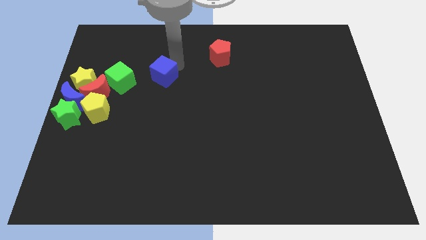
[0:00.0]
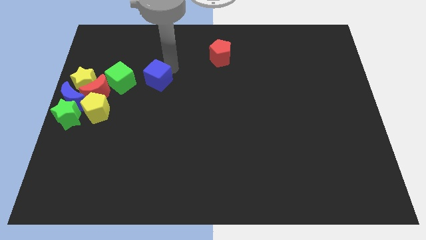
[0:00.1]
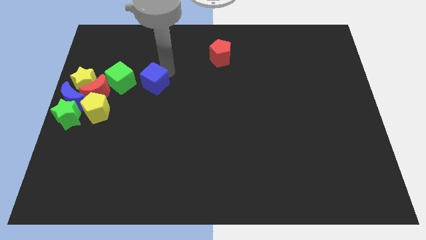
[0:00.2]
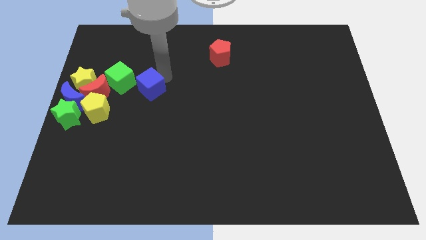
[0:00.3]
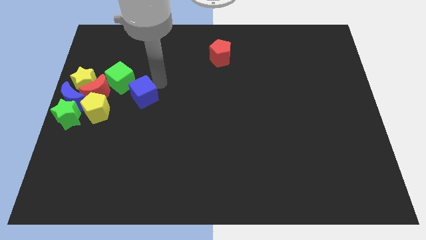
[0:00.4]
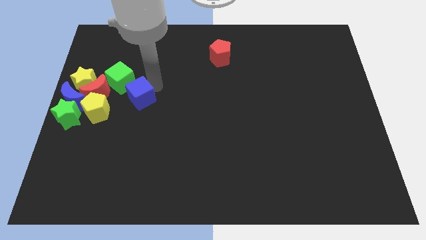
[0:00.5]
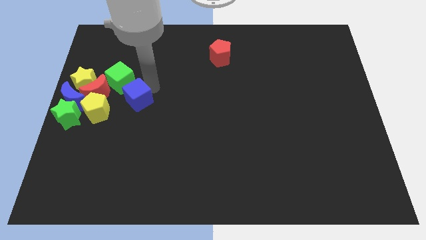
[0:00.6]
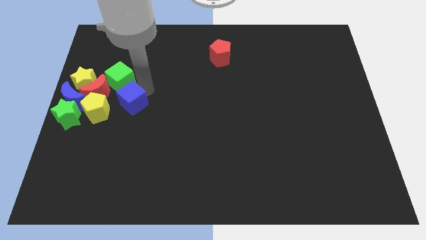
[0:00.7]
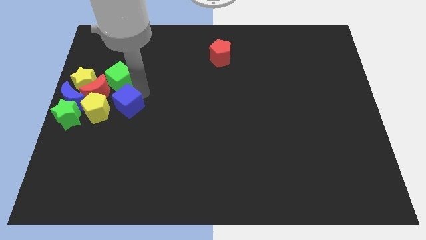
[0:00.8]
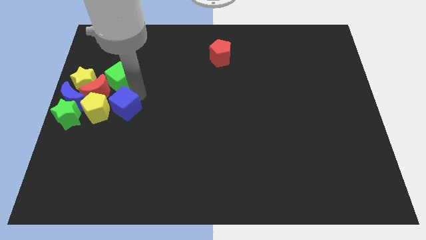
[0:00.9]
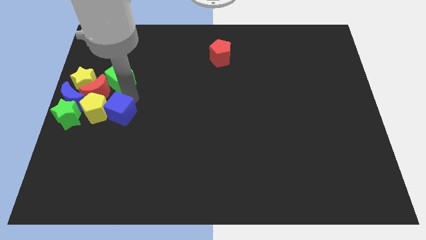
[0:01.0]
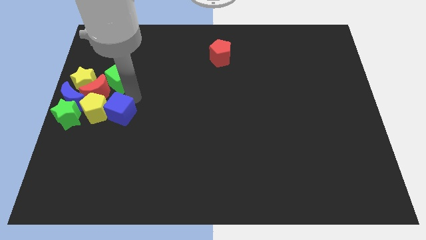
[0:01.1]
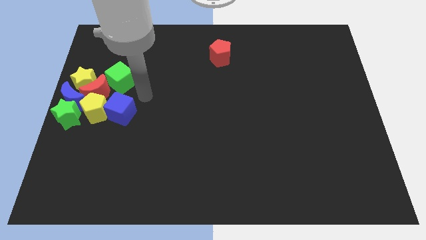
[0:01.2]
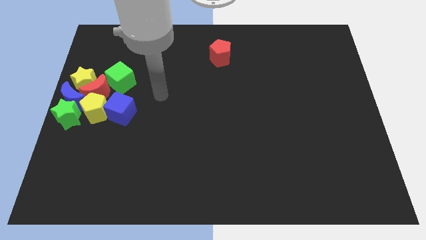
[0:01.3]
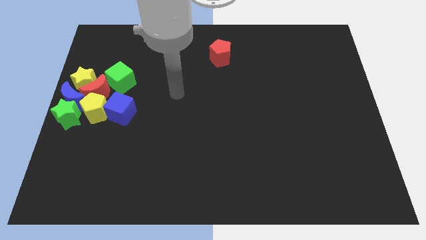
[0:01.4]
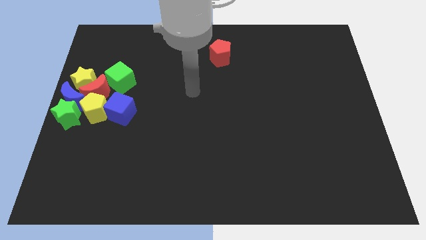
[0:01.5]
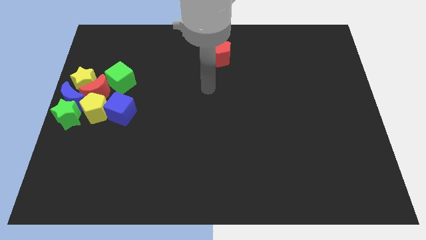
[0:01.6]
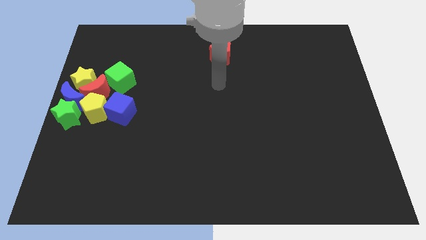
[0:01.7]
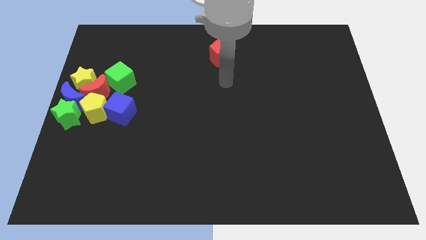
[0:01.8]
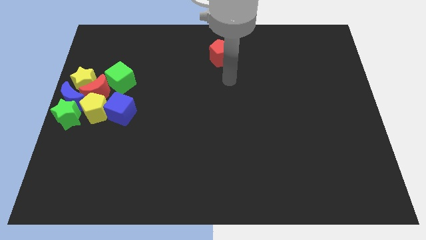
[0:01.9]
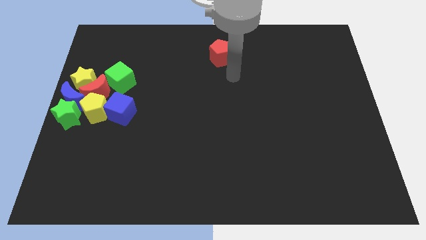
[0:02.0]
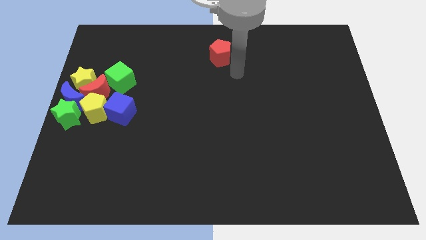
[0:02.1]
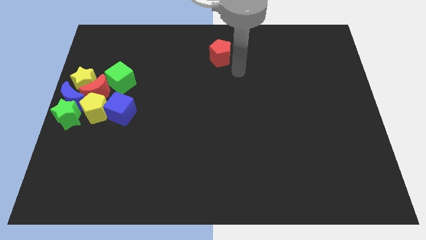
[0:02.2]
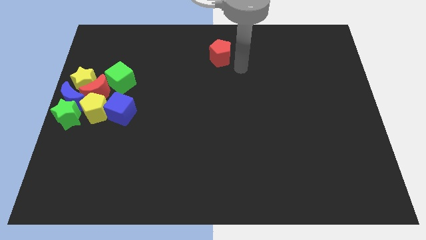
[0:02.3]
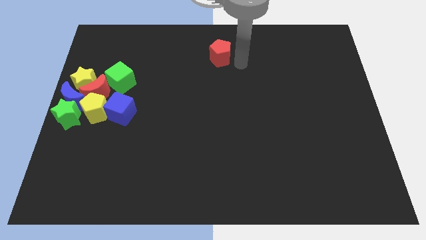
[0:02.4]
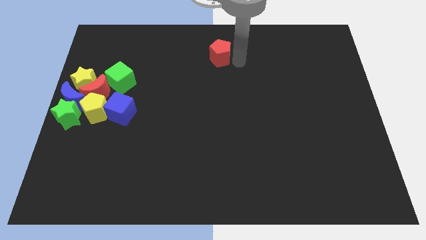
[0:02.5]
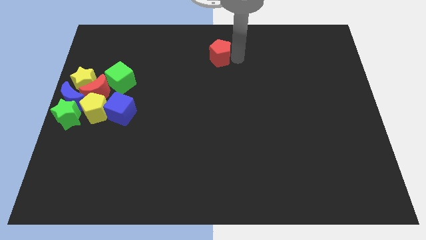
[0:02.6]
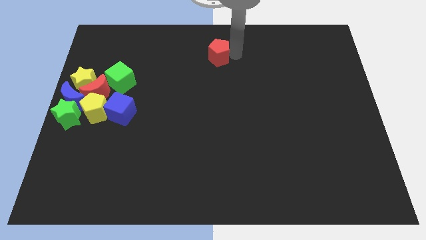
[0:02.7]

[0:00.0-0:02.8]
move your arm to the right of the red pentagon

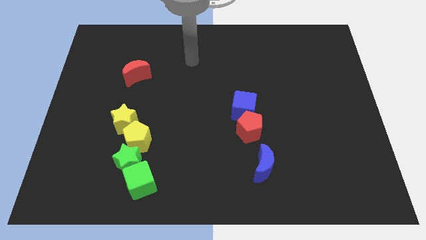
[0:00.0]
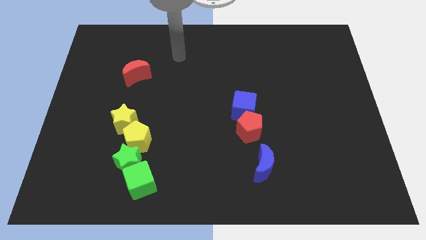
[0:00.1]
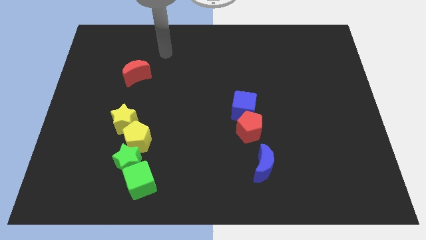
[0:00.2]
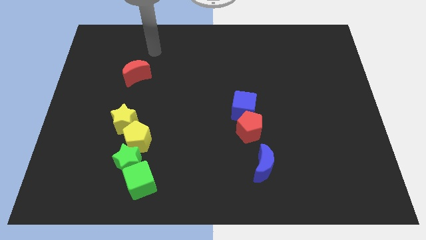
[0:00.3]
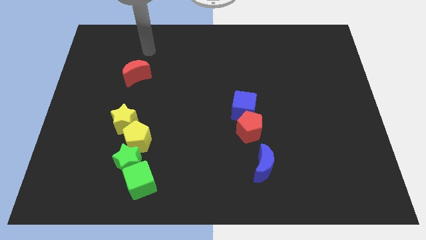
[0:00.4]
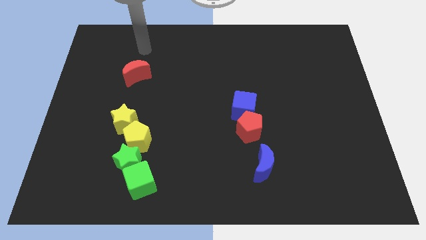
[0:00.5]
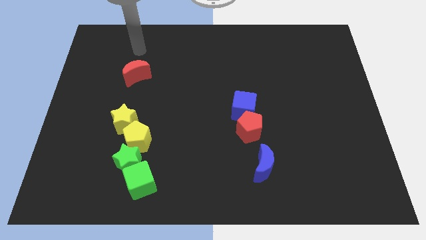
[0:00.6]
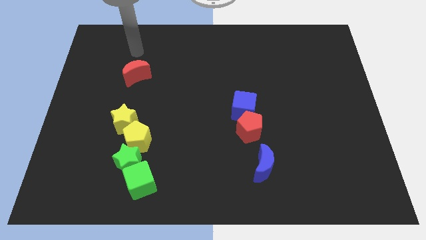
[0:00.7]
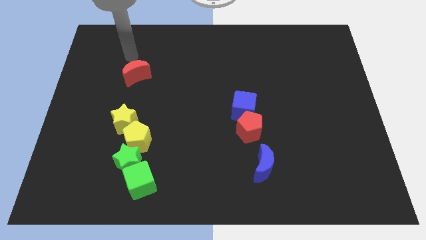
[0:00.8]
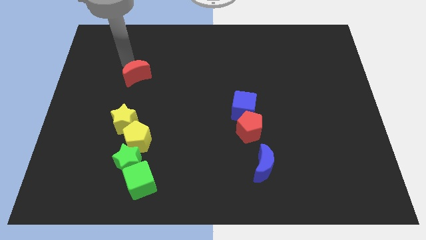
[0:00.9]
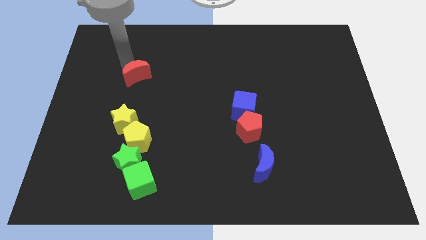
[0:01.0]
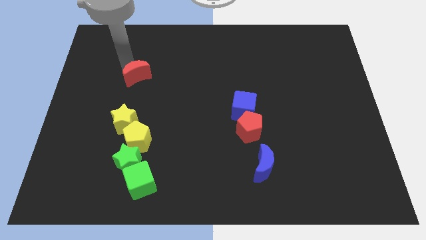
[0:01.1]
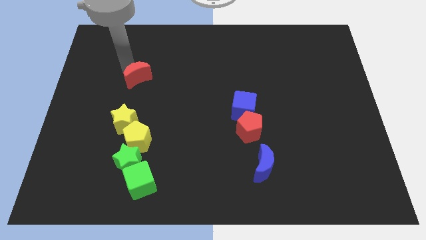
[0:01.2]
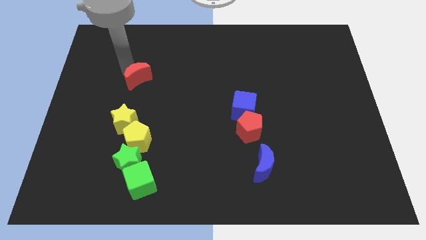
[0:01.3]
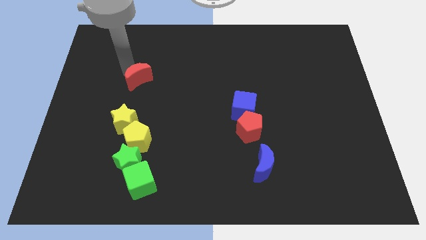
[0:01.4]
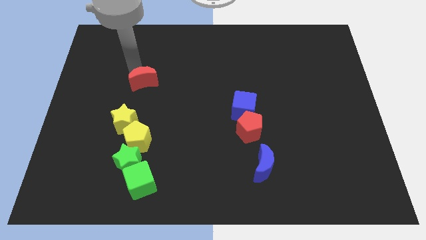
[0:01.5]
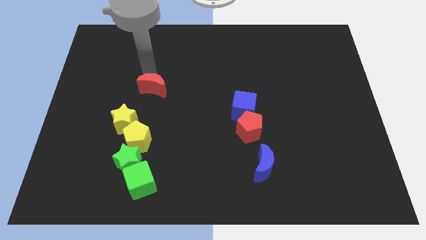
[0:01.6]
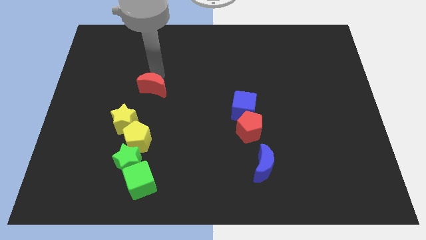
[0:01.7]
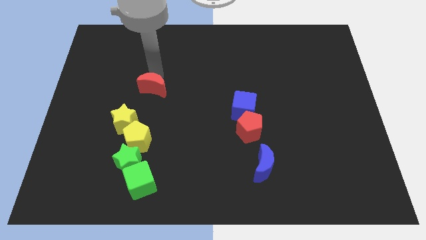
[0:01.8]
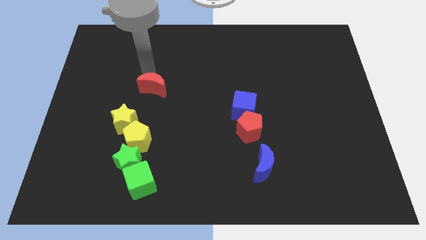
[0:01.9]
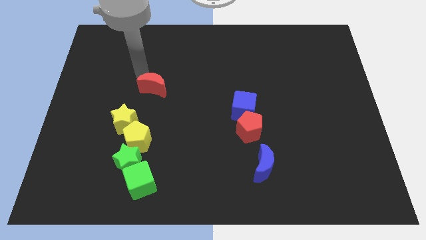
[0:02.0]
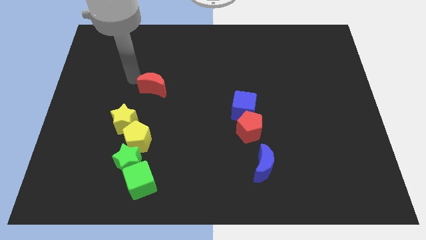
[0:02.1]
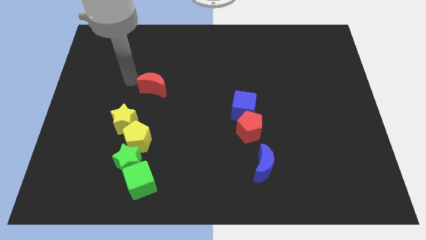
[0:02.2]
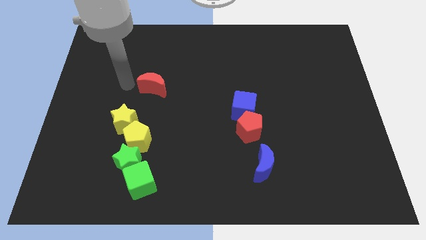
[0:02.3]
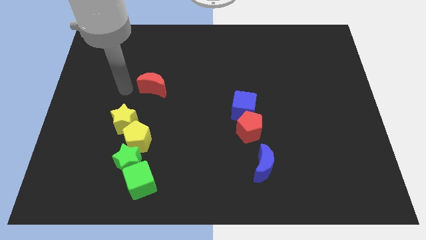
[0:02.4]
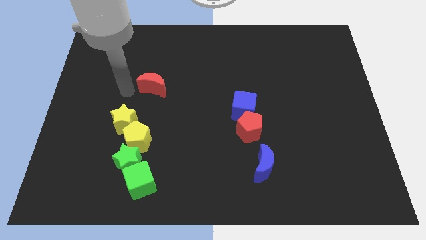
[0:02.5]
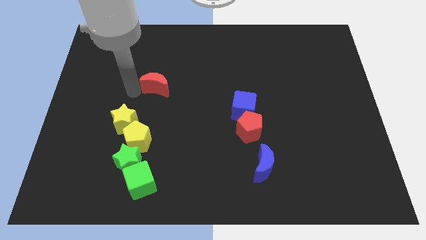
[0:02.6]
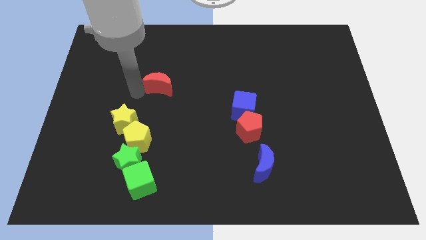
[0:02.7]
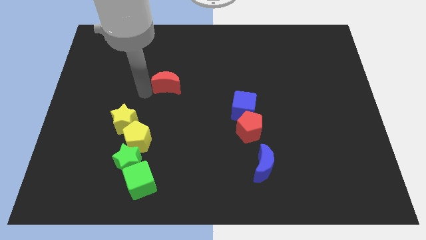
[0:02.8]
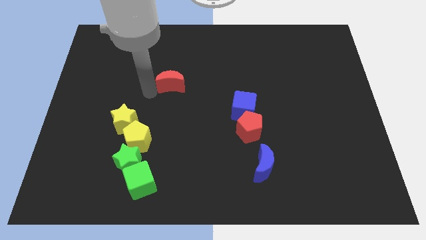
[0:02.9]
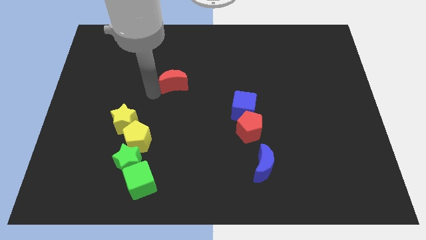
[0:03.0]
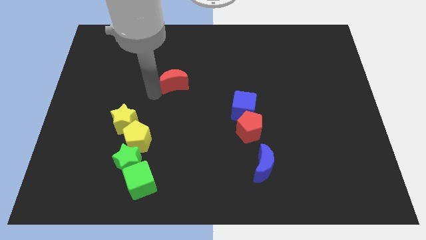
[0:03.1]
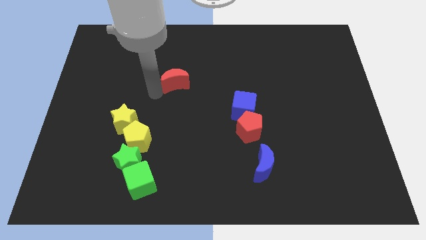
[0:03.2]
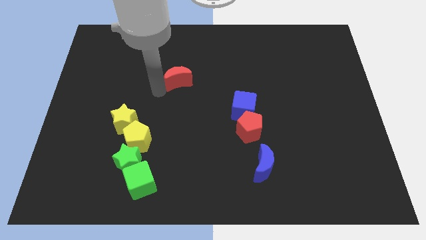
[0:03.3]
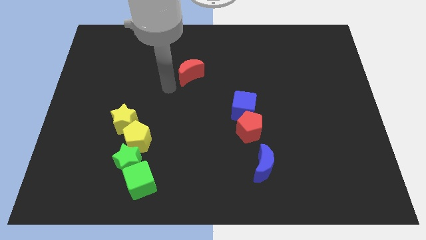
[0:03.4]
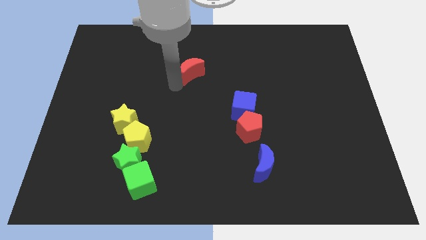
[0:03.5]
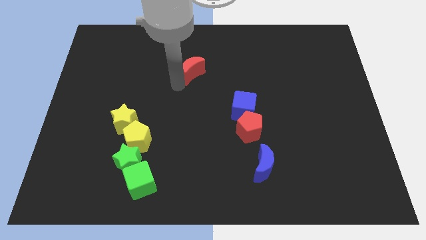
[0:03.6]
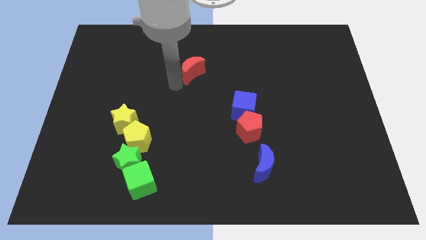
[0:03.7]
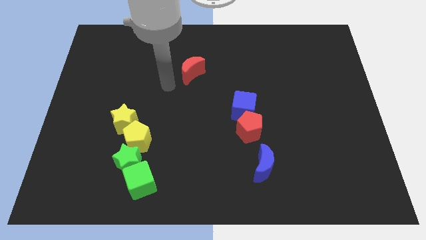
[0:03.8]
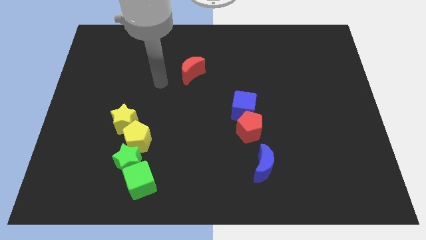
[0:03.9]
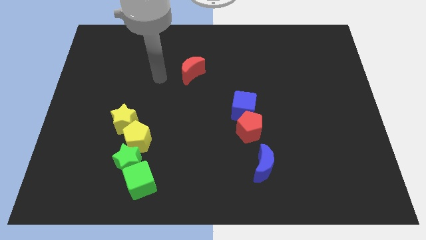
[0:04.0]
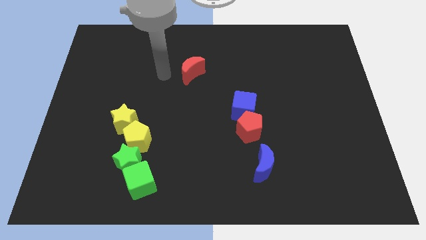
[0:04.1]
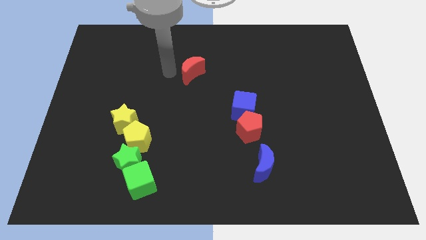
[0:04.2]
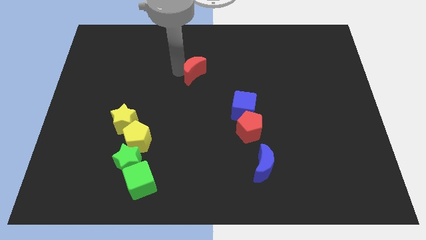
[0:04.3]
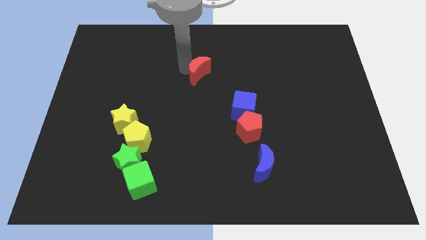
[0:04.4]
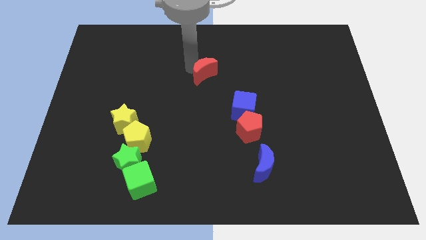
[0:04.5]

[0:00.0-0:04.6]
move the red moon towards the top side of the blue cube

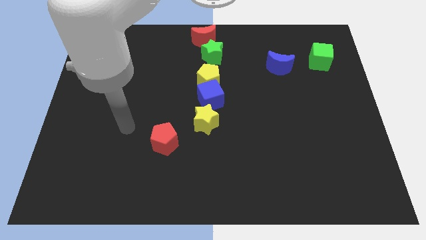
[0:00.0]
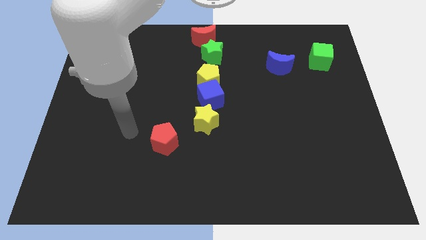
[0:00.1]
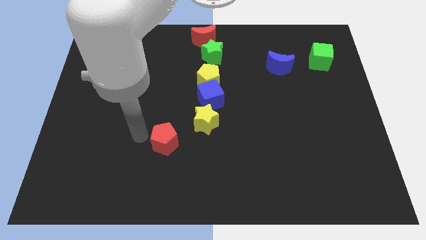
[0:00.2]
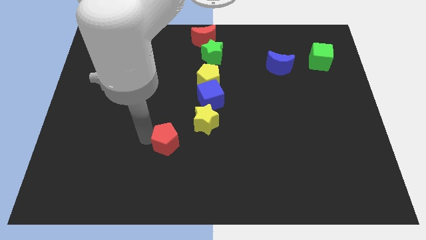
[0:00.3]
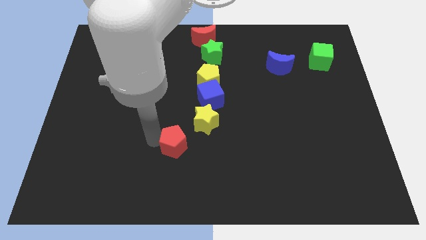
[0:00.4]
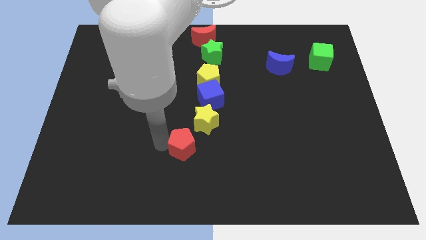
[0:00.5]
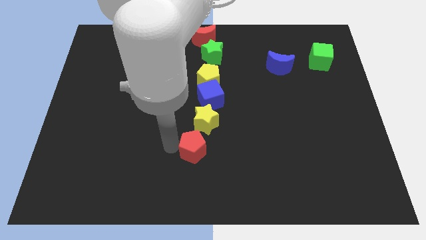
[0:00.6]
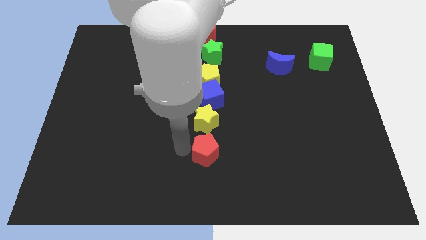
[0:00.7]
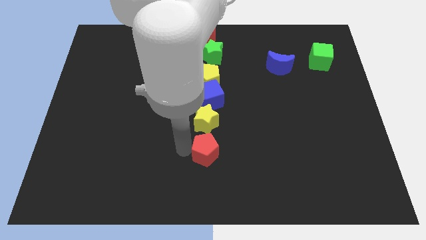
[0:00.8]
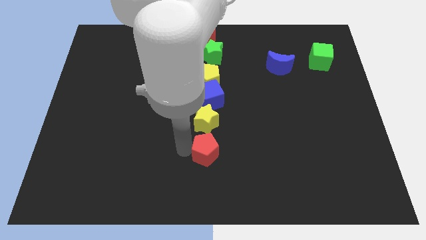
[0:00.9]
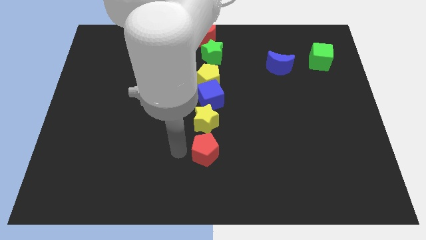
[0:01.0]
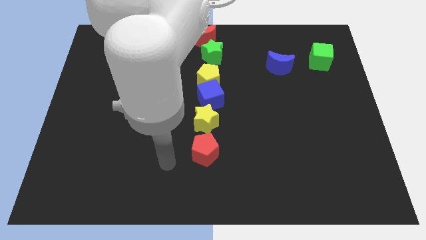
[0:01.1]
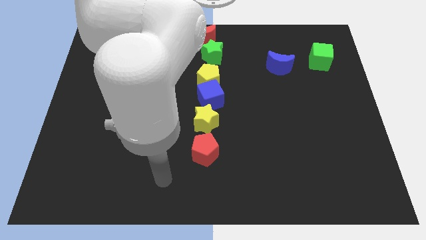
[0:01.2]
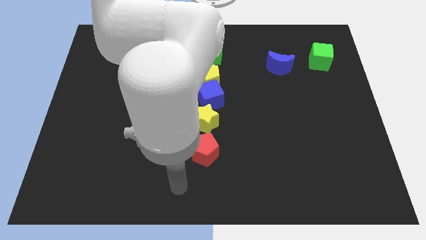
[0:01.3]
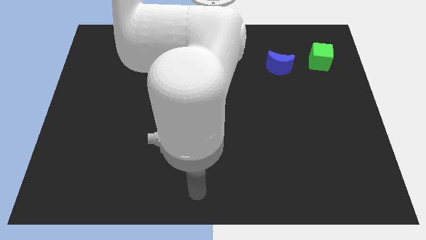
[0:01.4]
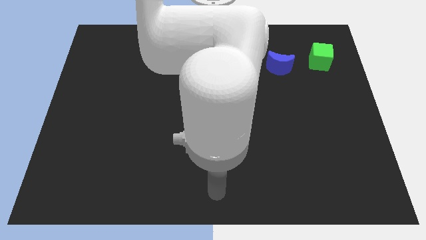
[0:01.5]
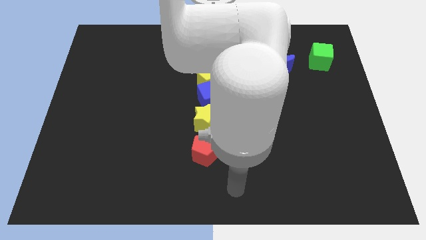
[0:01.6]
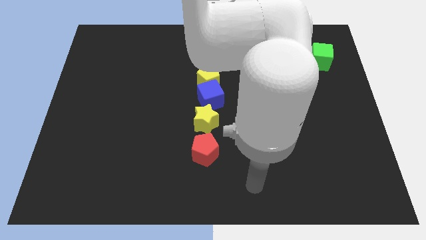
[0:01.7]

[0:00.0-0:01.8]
push the red pentagon towards the right
